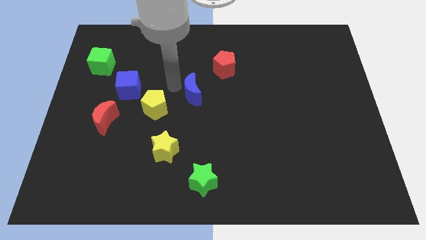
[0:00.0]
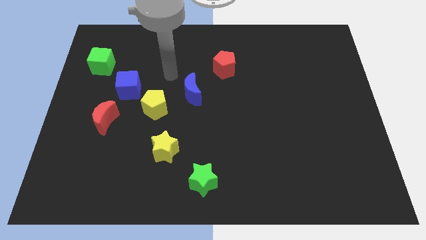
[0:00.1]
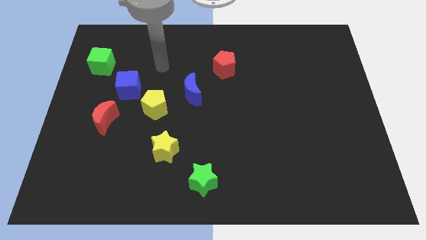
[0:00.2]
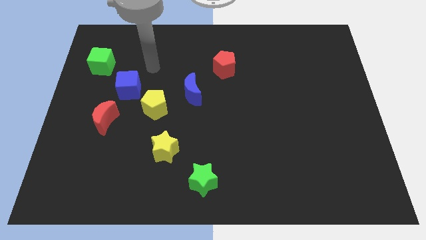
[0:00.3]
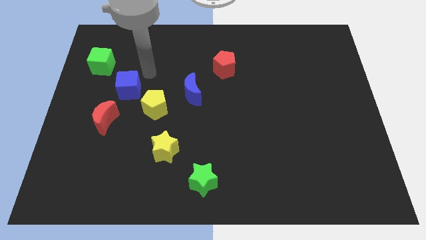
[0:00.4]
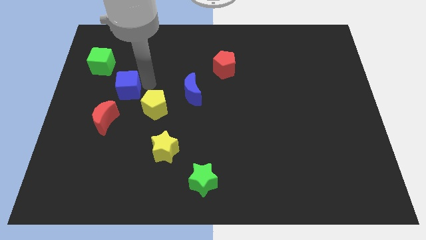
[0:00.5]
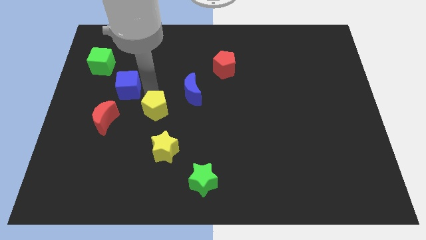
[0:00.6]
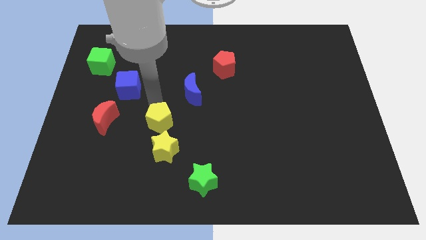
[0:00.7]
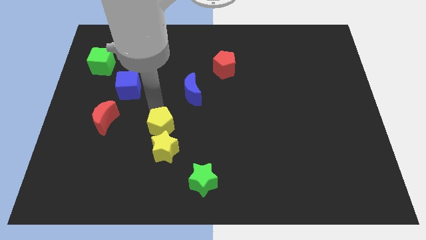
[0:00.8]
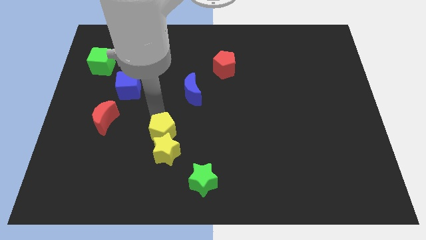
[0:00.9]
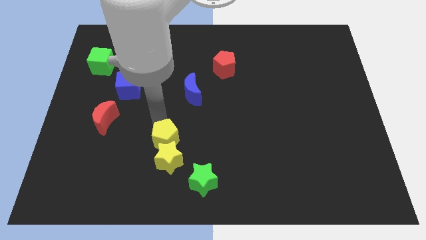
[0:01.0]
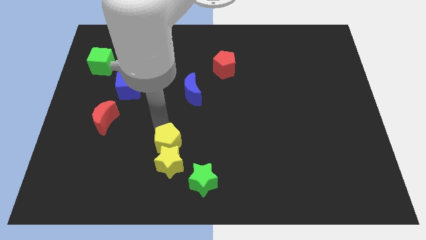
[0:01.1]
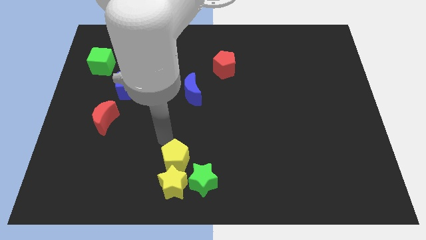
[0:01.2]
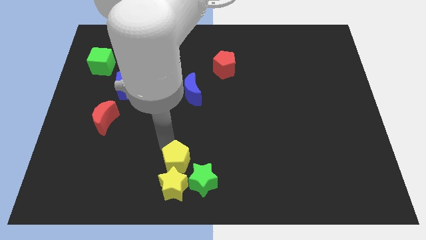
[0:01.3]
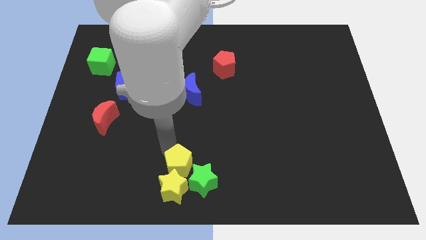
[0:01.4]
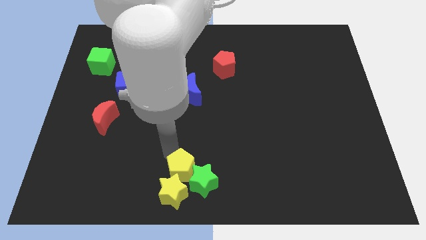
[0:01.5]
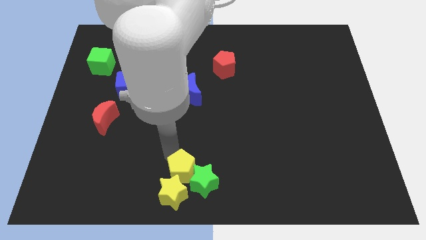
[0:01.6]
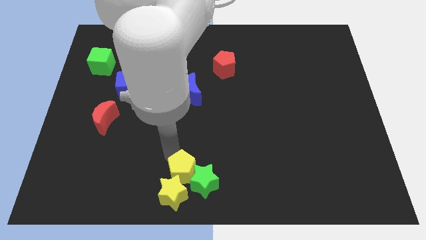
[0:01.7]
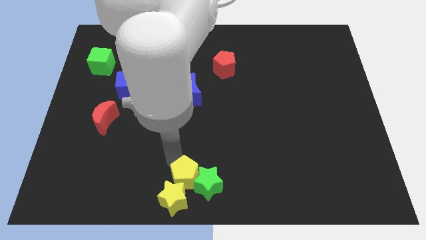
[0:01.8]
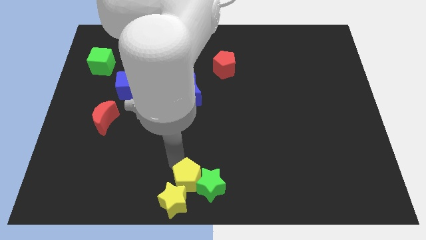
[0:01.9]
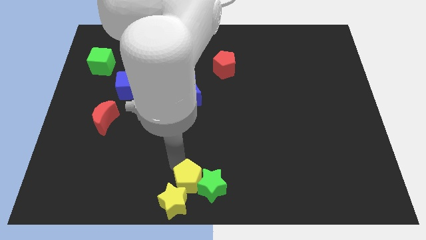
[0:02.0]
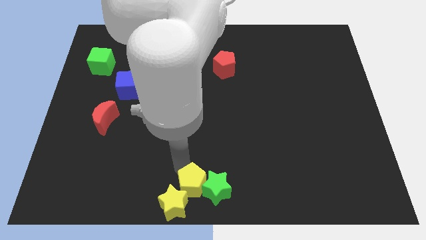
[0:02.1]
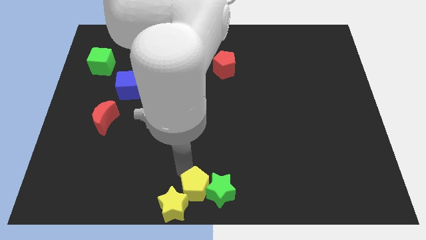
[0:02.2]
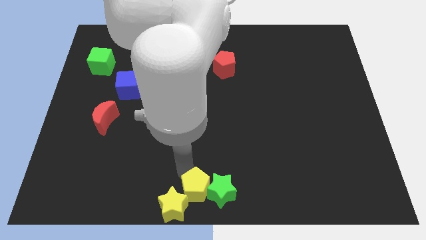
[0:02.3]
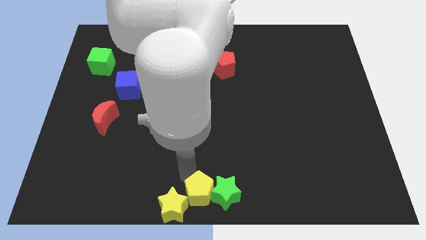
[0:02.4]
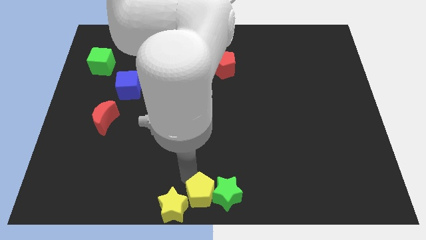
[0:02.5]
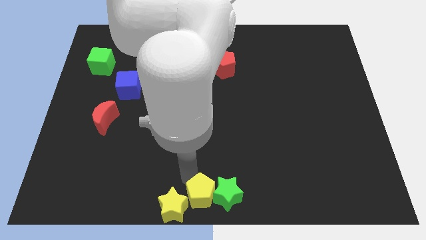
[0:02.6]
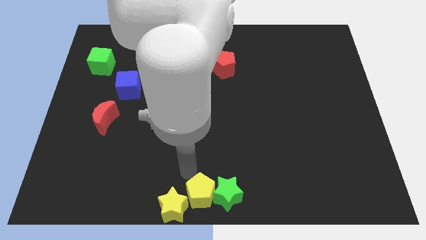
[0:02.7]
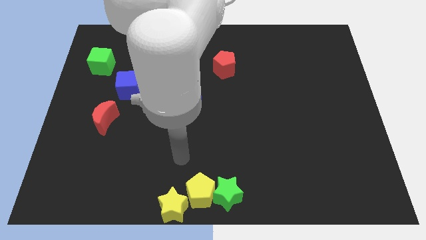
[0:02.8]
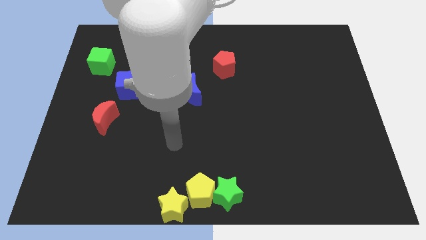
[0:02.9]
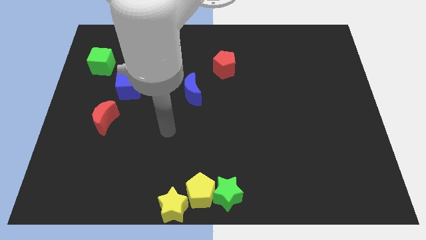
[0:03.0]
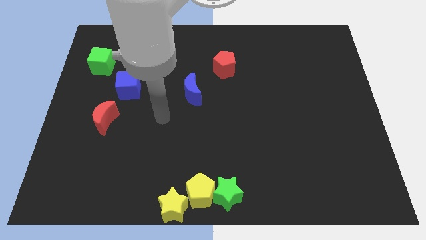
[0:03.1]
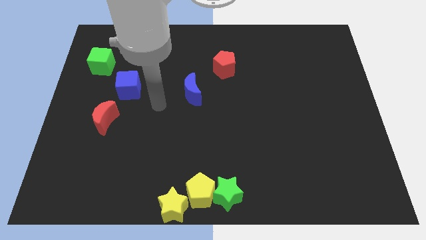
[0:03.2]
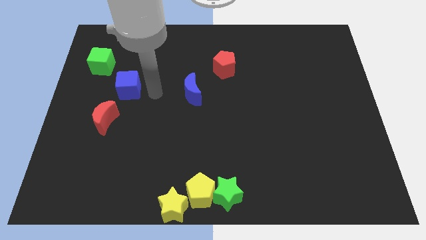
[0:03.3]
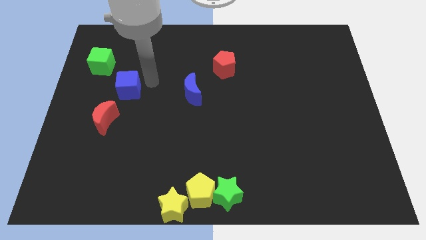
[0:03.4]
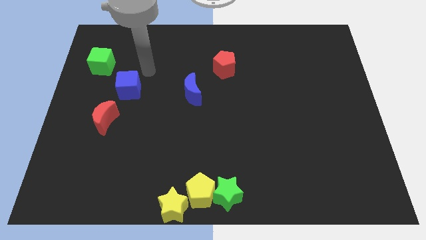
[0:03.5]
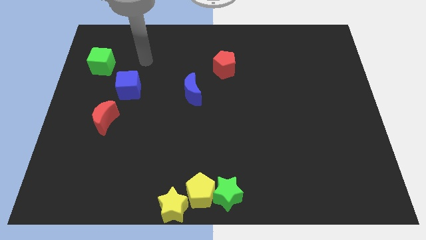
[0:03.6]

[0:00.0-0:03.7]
push the yellow penatgon and yellow star towards the bottom center

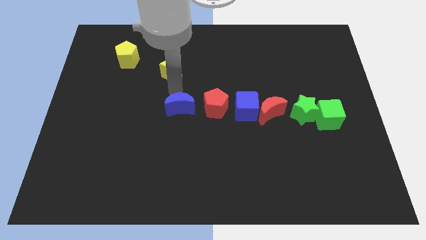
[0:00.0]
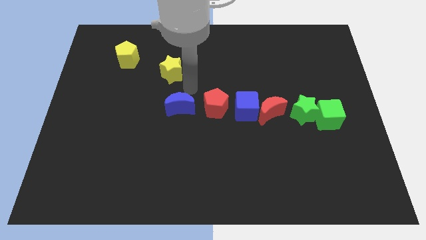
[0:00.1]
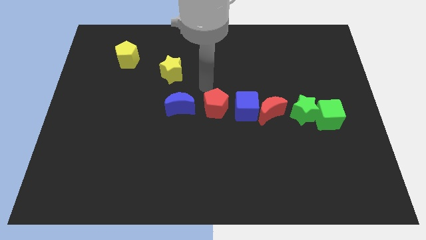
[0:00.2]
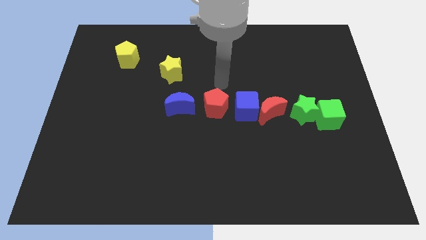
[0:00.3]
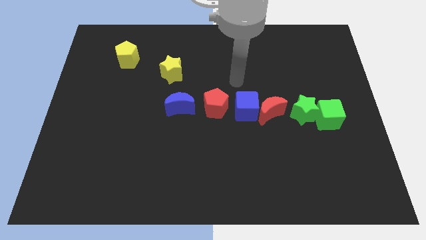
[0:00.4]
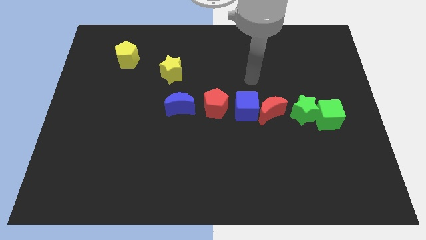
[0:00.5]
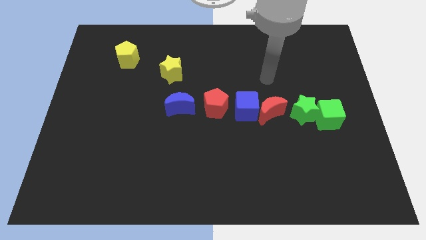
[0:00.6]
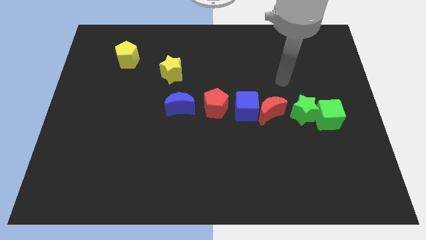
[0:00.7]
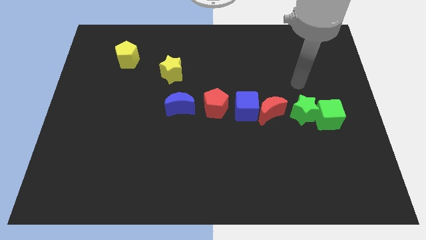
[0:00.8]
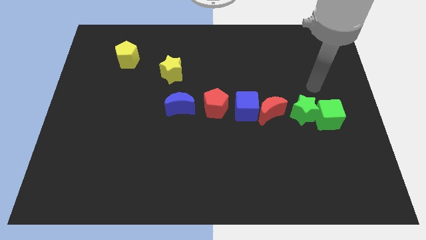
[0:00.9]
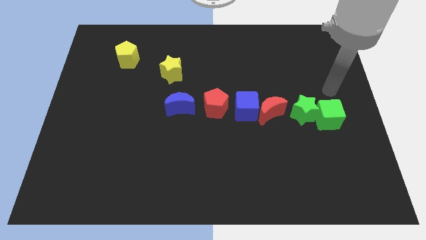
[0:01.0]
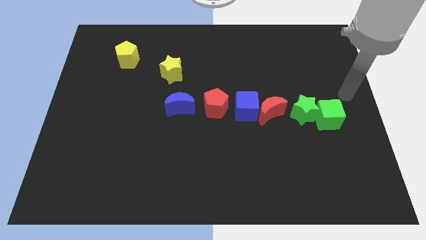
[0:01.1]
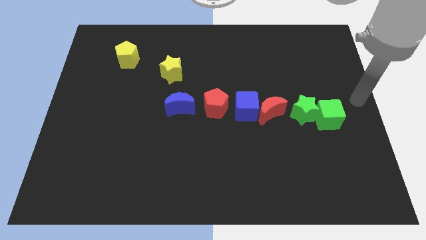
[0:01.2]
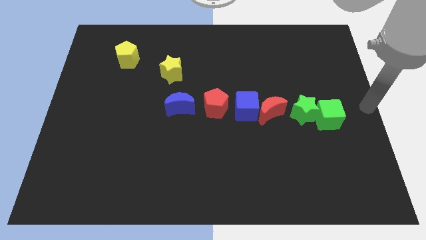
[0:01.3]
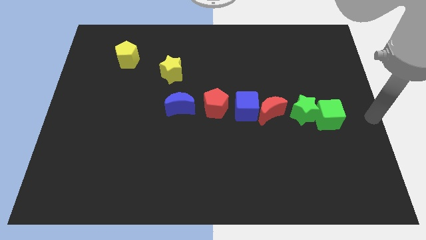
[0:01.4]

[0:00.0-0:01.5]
move your hand to the right of the green cube

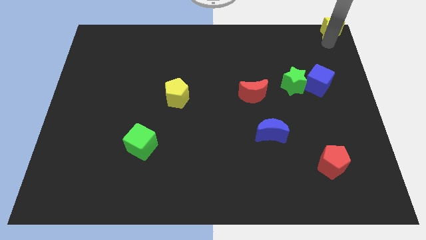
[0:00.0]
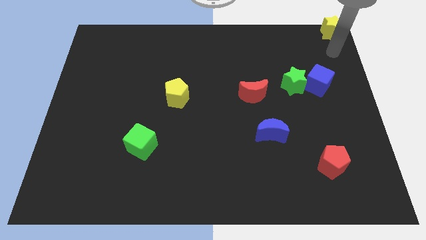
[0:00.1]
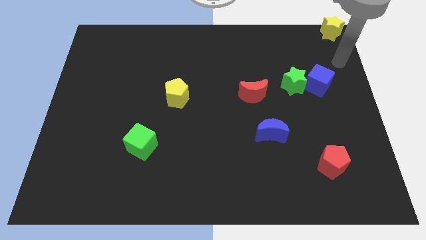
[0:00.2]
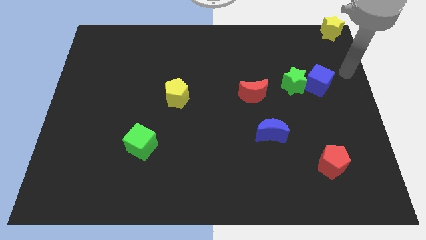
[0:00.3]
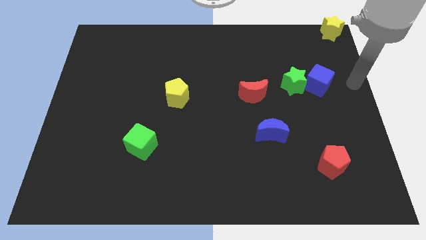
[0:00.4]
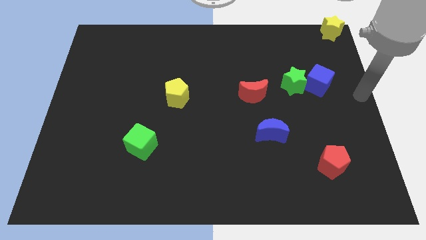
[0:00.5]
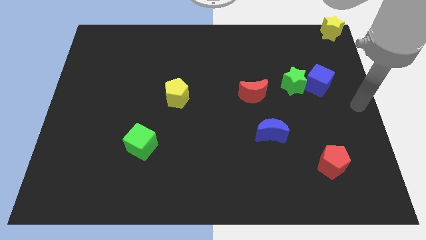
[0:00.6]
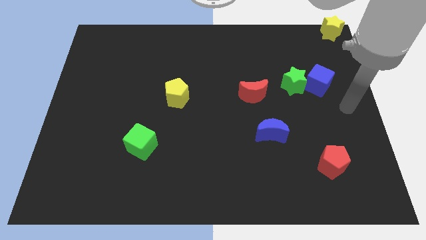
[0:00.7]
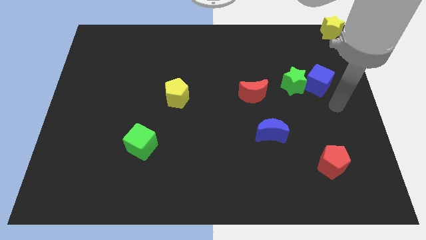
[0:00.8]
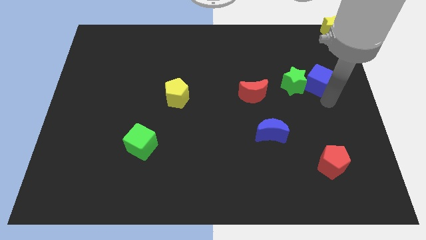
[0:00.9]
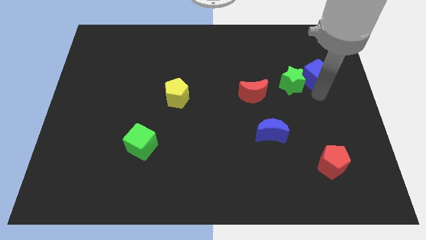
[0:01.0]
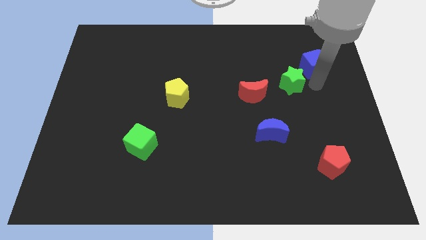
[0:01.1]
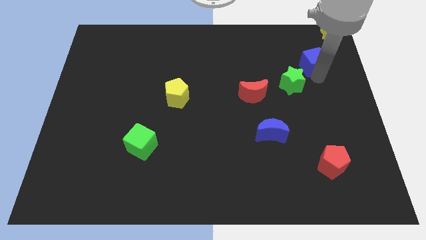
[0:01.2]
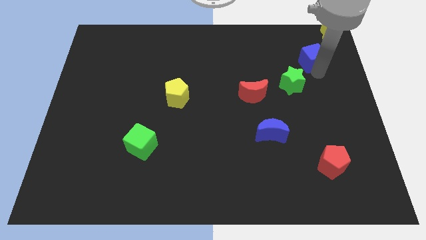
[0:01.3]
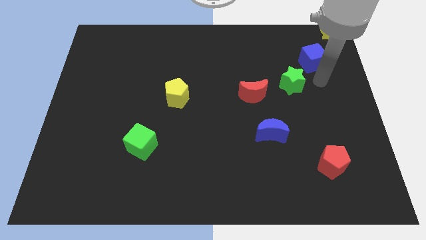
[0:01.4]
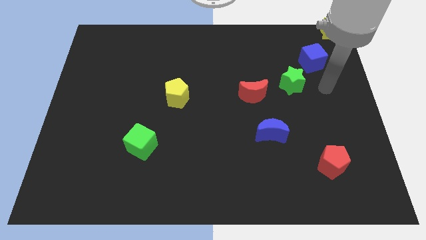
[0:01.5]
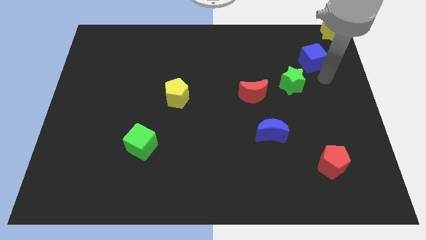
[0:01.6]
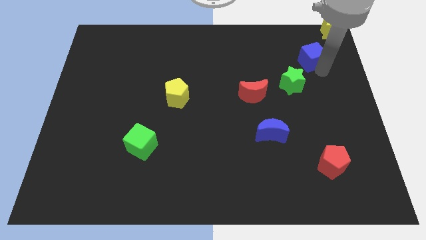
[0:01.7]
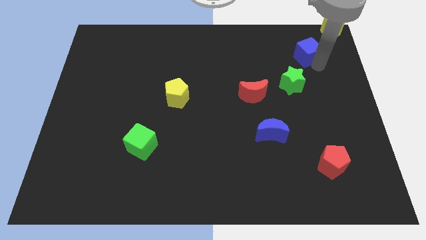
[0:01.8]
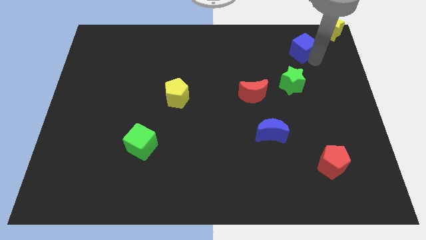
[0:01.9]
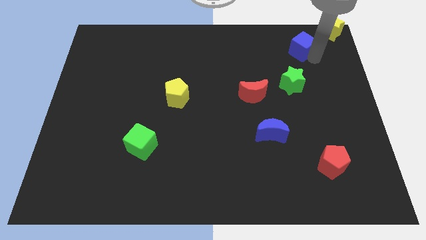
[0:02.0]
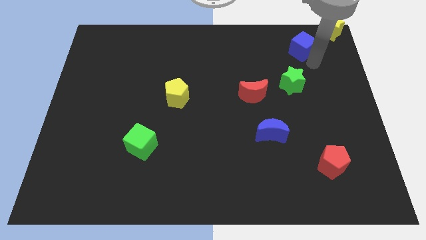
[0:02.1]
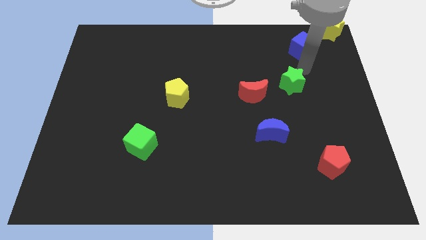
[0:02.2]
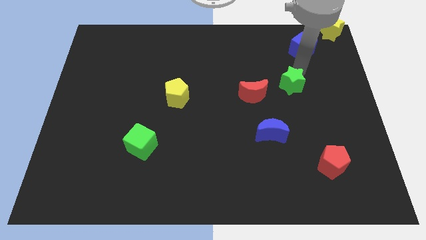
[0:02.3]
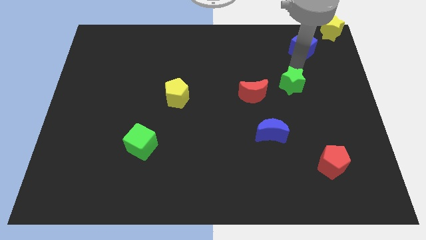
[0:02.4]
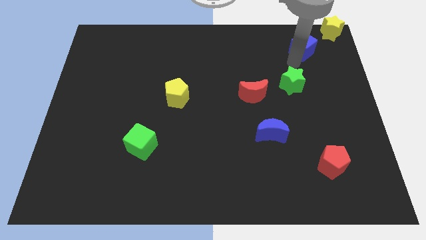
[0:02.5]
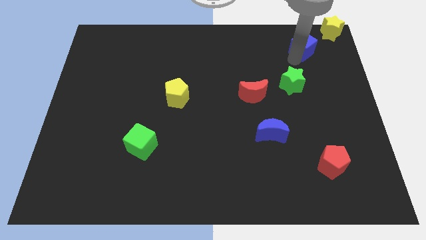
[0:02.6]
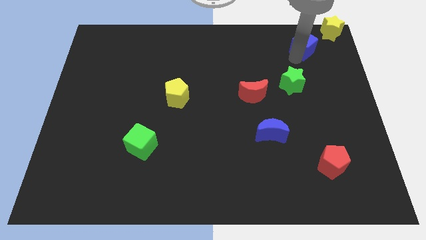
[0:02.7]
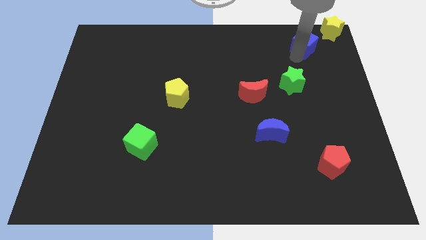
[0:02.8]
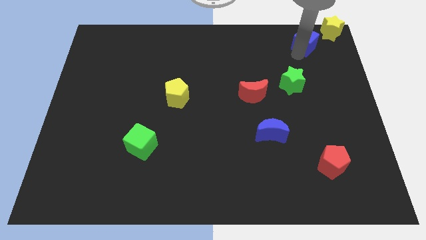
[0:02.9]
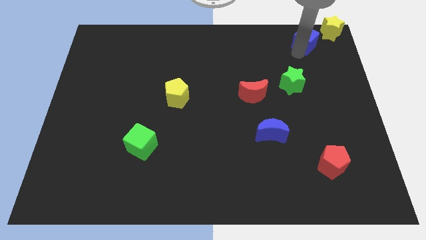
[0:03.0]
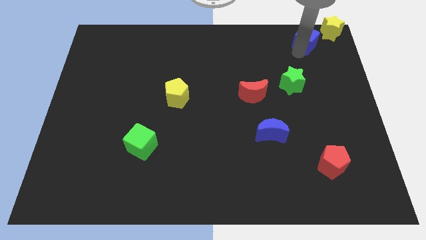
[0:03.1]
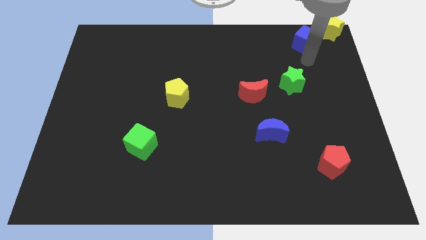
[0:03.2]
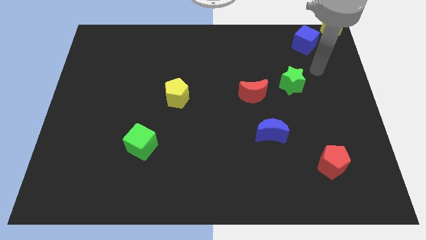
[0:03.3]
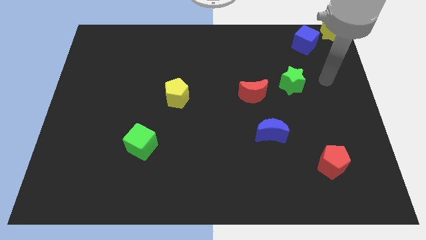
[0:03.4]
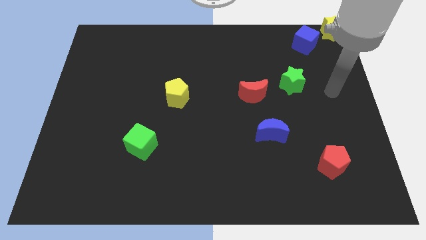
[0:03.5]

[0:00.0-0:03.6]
separate the blue cube from the green star

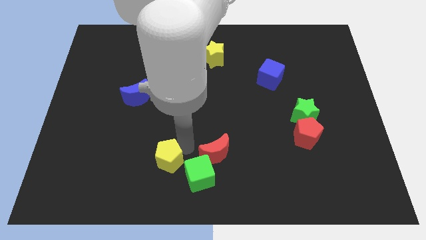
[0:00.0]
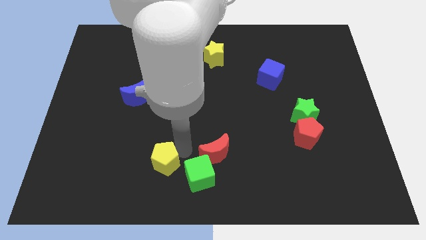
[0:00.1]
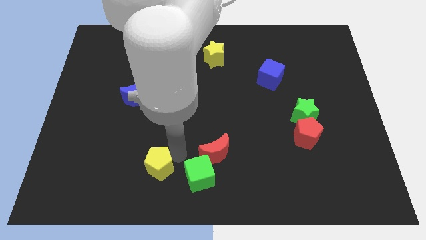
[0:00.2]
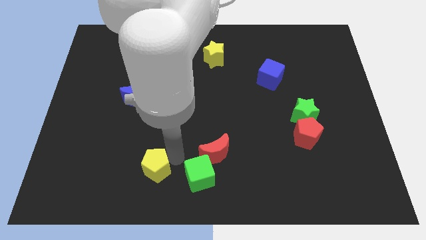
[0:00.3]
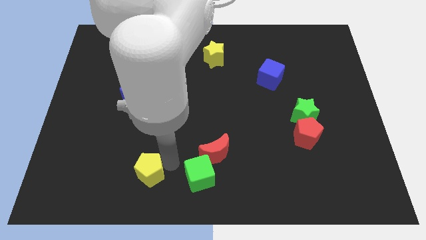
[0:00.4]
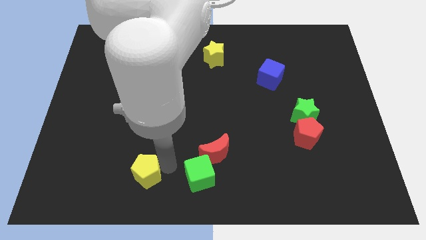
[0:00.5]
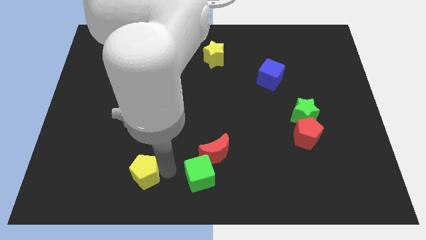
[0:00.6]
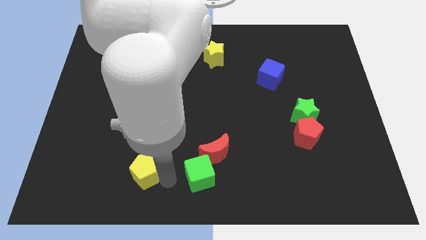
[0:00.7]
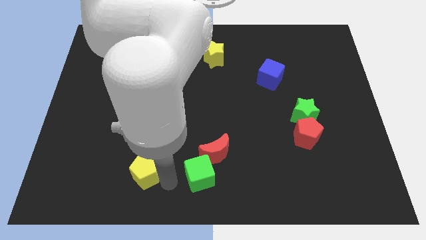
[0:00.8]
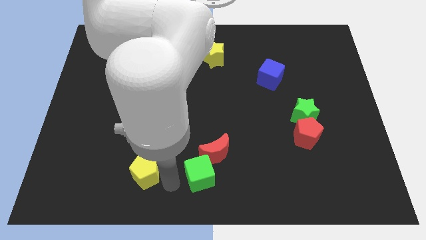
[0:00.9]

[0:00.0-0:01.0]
place yellow pentagon parallel left to green cube
